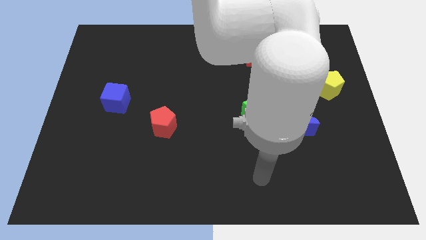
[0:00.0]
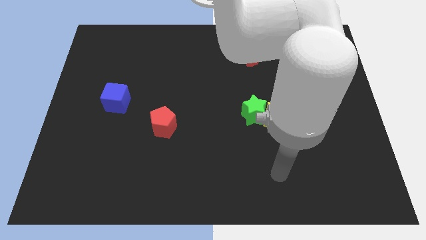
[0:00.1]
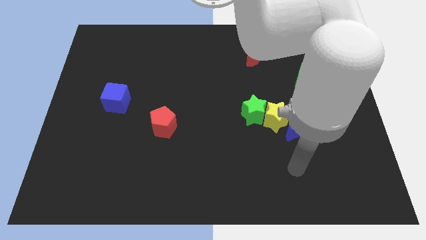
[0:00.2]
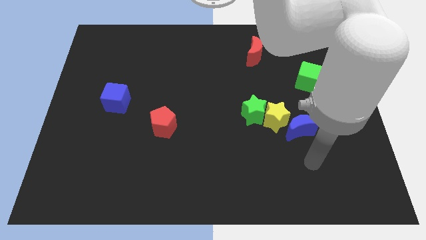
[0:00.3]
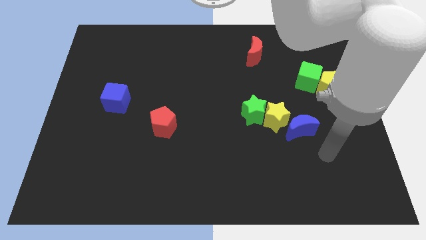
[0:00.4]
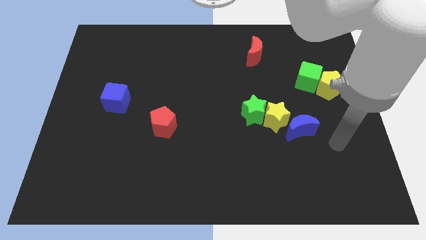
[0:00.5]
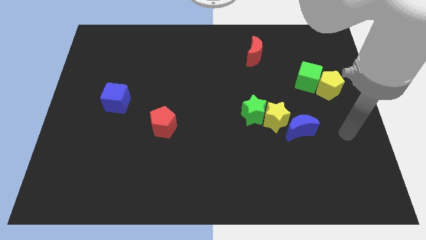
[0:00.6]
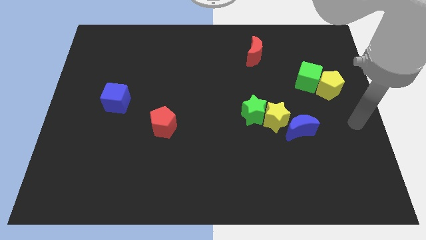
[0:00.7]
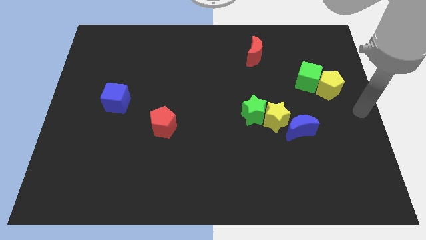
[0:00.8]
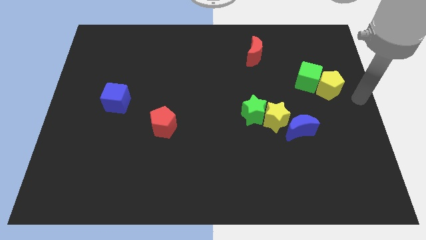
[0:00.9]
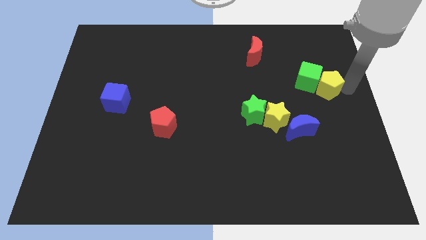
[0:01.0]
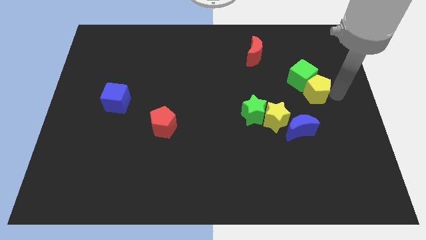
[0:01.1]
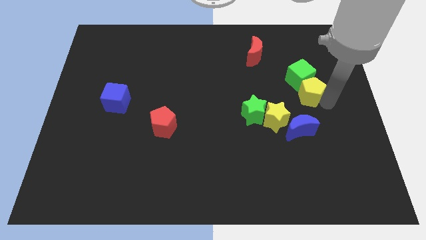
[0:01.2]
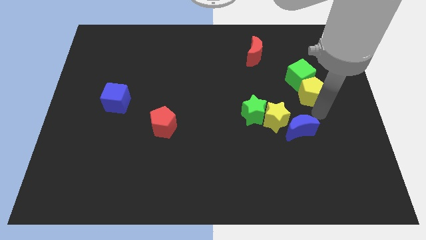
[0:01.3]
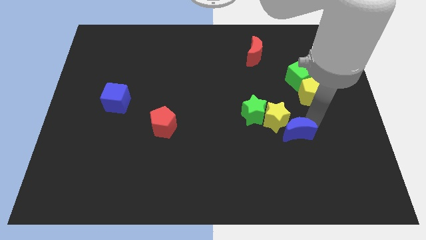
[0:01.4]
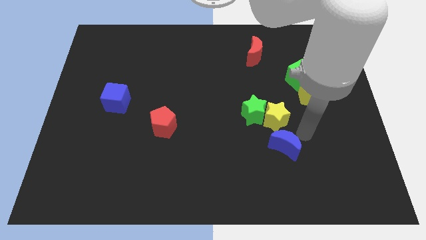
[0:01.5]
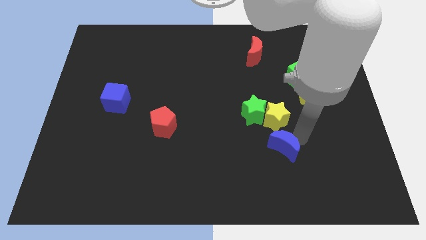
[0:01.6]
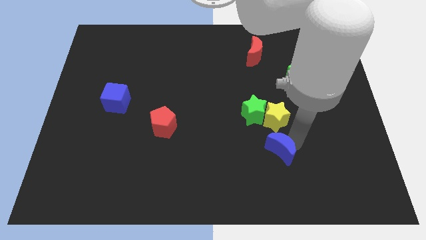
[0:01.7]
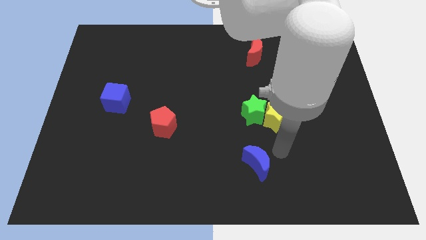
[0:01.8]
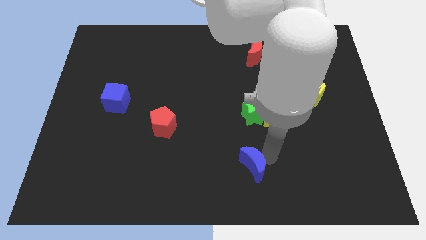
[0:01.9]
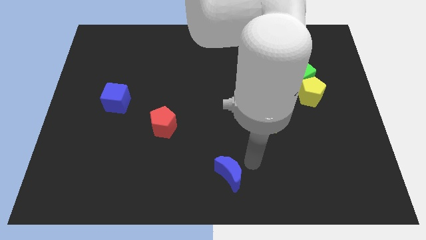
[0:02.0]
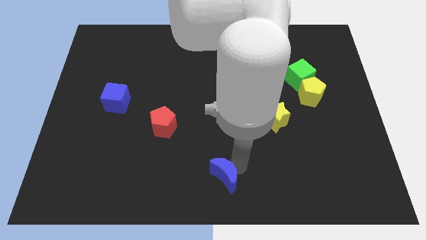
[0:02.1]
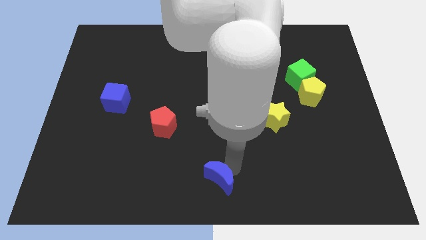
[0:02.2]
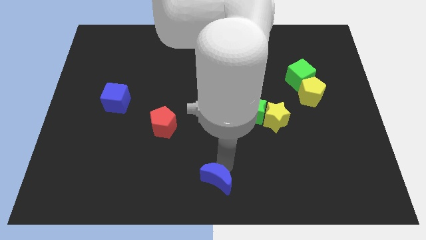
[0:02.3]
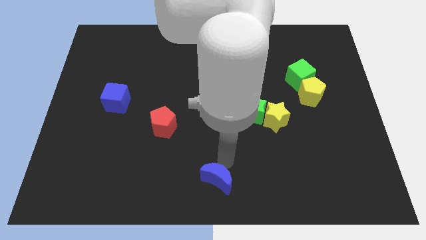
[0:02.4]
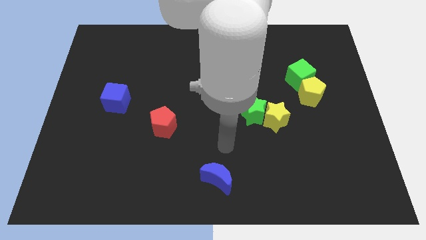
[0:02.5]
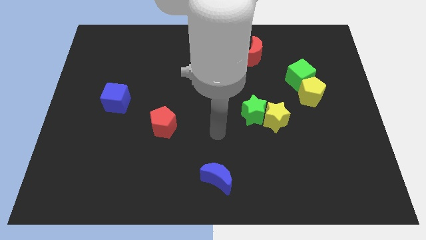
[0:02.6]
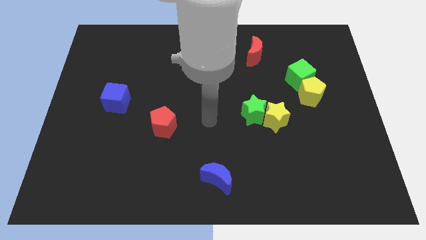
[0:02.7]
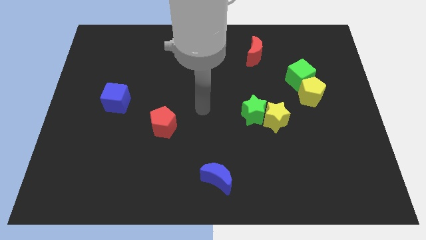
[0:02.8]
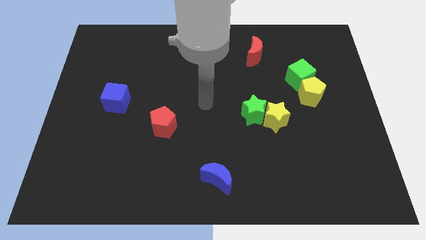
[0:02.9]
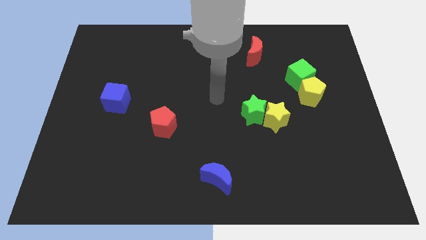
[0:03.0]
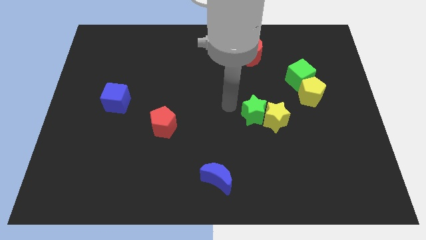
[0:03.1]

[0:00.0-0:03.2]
push the blue crescent towards the bottom center and go away

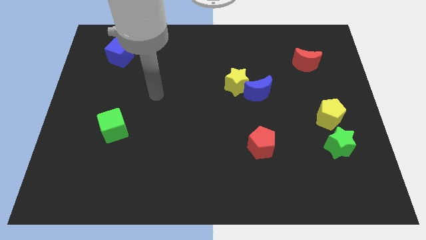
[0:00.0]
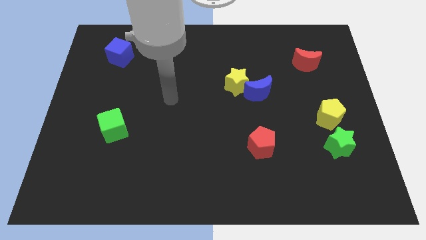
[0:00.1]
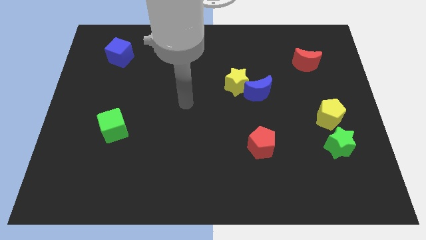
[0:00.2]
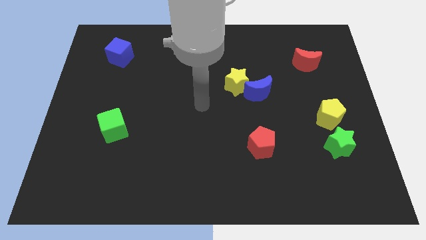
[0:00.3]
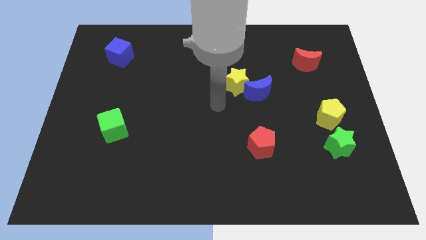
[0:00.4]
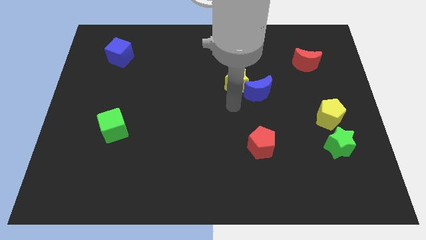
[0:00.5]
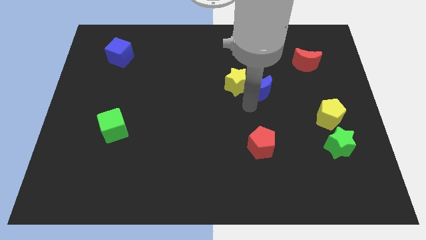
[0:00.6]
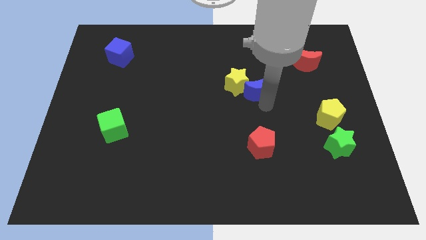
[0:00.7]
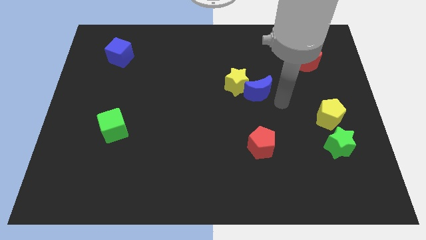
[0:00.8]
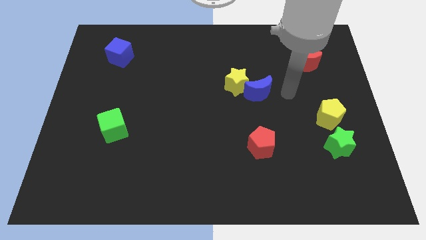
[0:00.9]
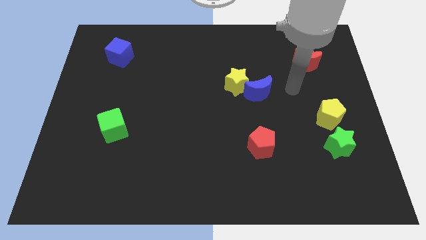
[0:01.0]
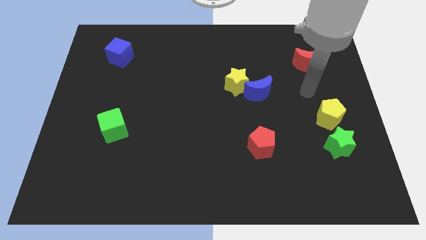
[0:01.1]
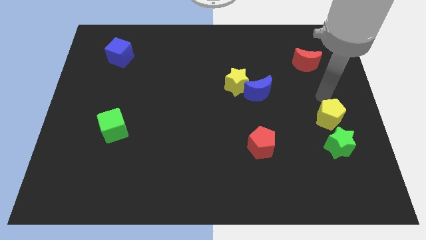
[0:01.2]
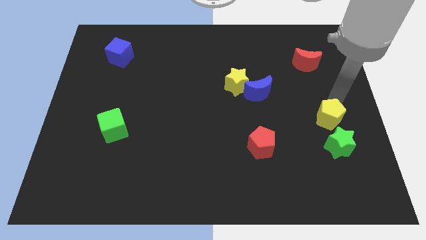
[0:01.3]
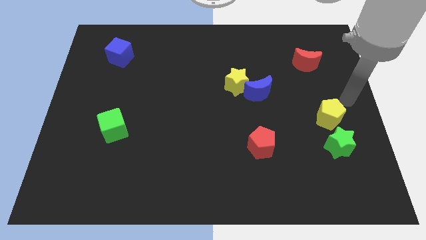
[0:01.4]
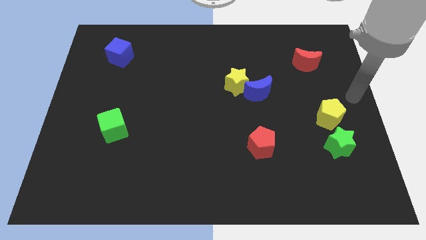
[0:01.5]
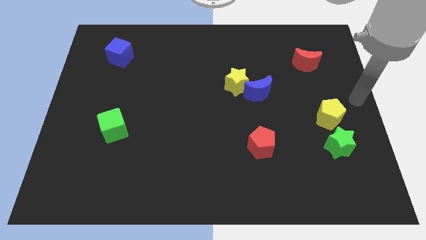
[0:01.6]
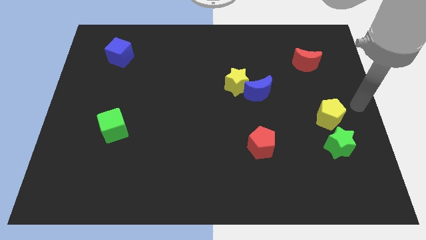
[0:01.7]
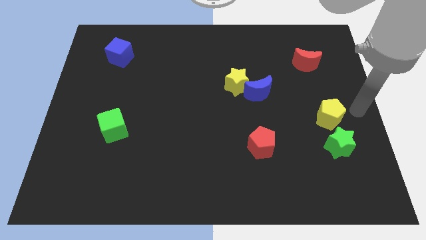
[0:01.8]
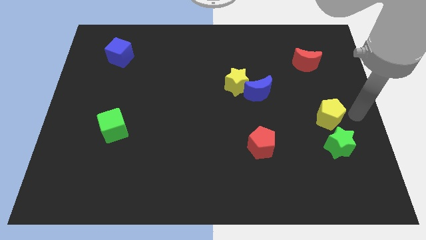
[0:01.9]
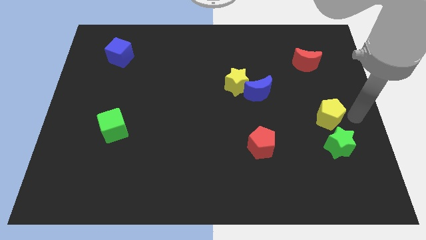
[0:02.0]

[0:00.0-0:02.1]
move your arm towards the yellow star

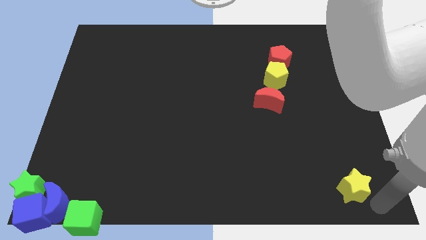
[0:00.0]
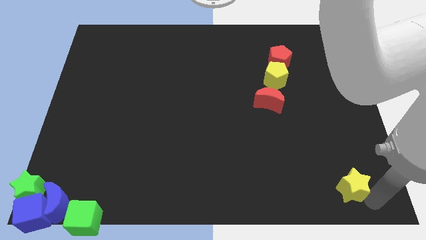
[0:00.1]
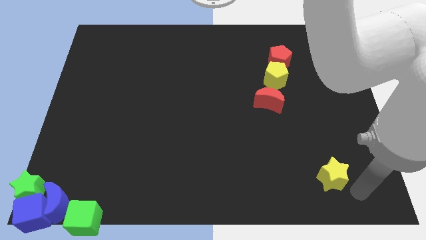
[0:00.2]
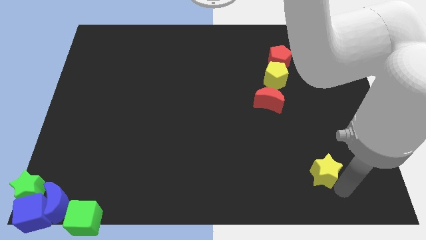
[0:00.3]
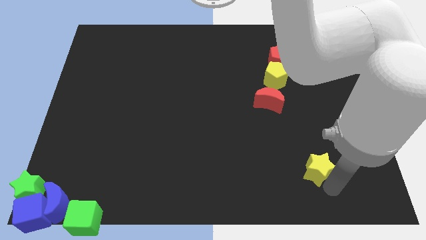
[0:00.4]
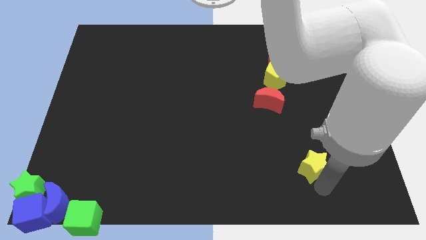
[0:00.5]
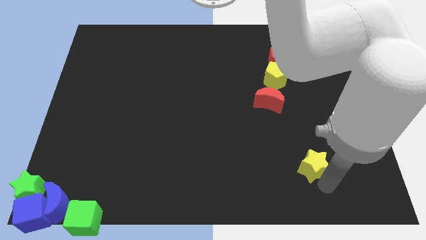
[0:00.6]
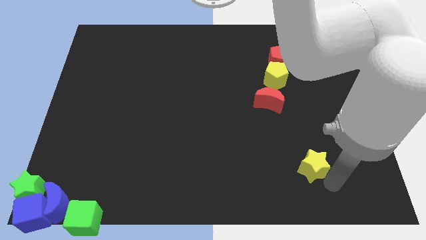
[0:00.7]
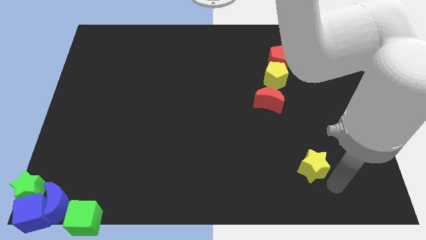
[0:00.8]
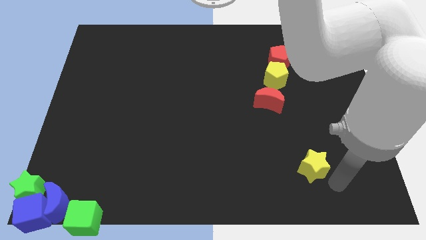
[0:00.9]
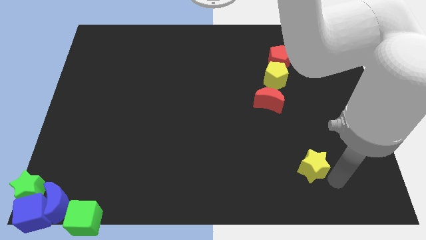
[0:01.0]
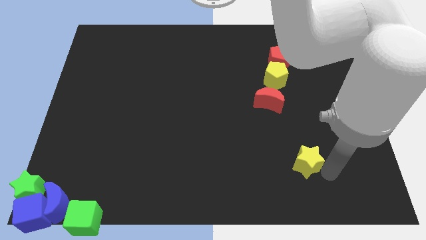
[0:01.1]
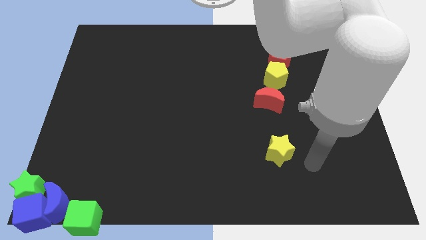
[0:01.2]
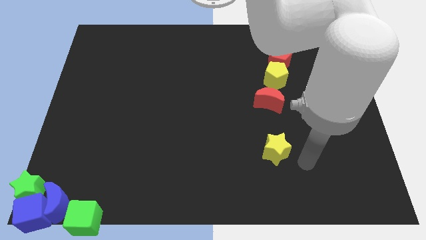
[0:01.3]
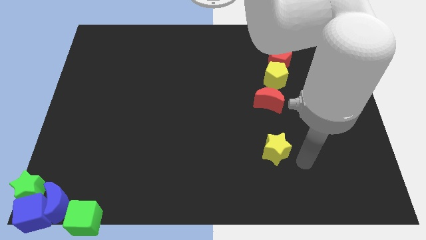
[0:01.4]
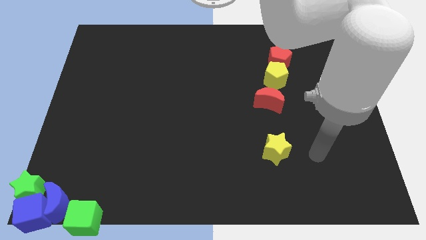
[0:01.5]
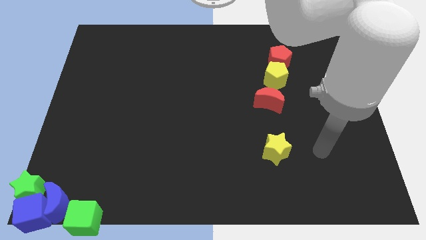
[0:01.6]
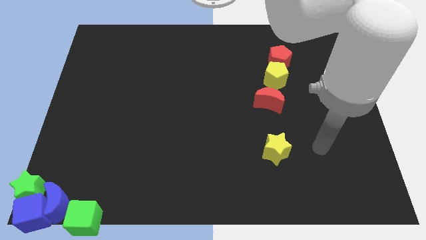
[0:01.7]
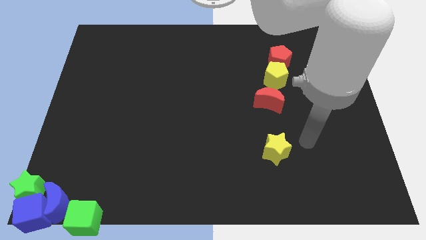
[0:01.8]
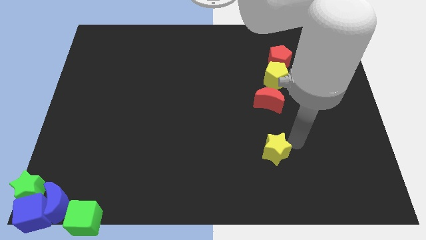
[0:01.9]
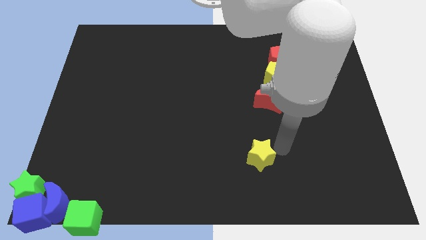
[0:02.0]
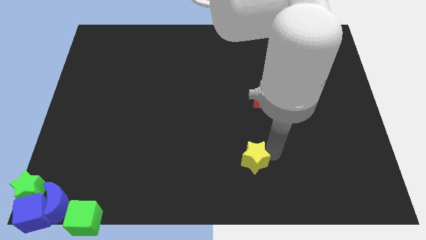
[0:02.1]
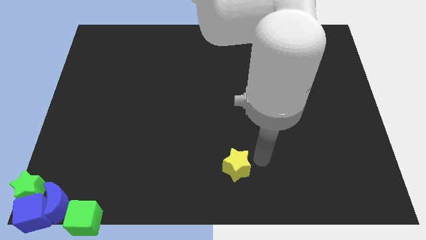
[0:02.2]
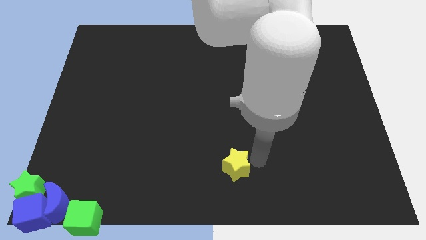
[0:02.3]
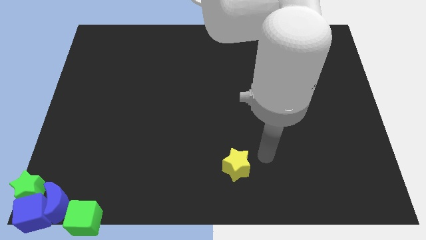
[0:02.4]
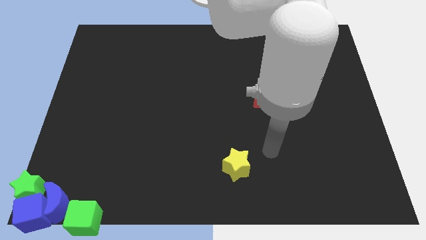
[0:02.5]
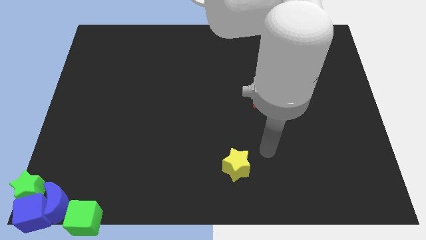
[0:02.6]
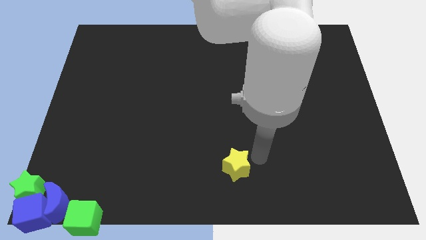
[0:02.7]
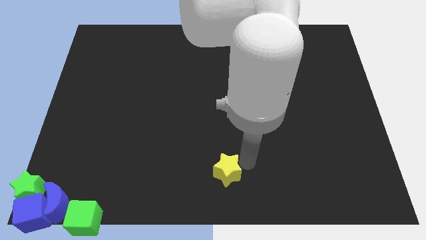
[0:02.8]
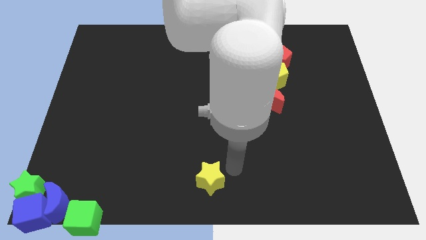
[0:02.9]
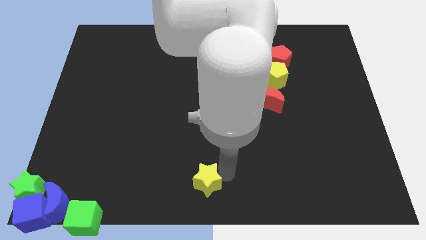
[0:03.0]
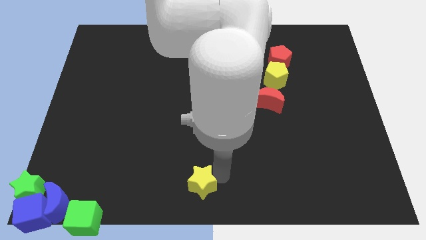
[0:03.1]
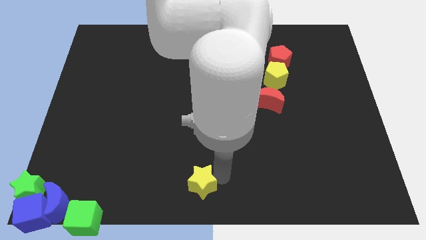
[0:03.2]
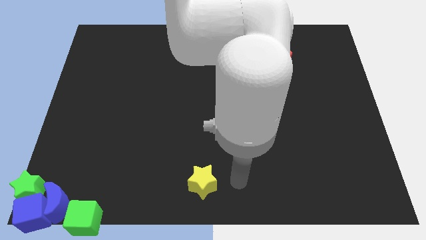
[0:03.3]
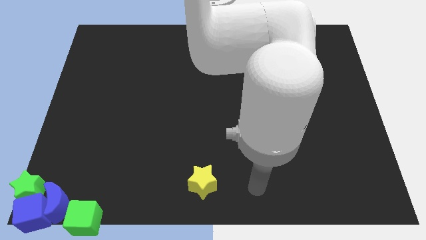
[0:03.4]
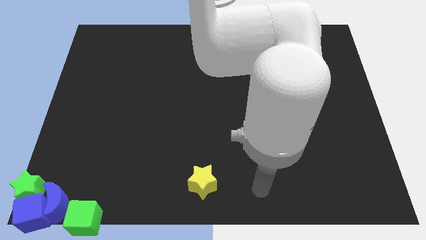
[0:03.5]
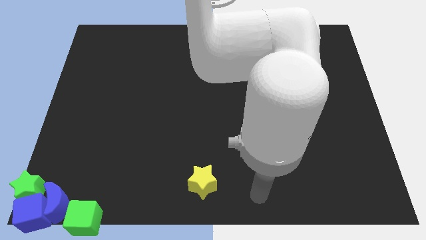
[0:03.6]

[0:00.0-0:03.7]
move the yellow star to the bottom center of the board
